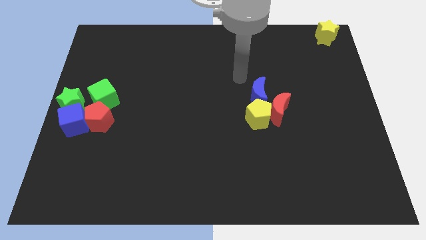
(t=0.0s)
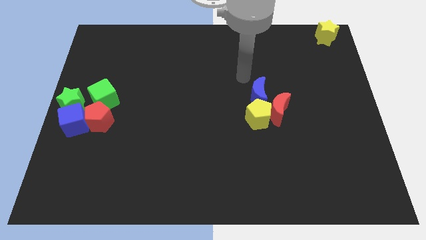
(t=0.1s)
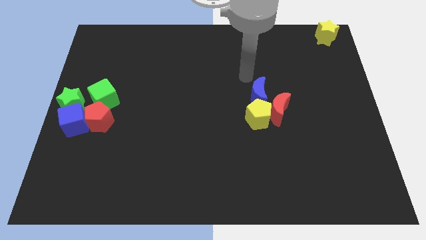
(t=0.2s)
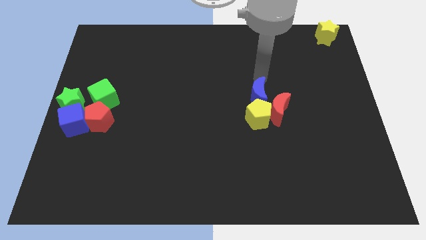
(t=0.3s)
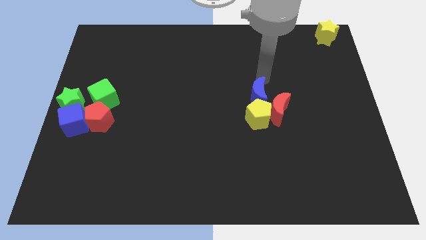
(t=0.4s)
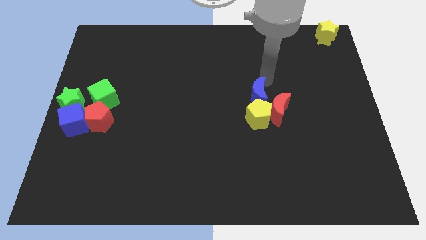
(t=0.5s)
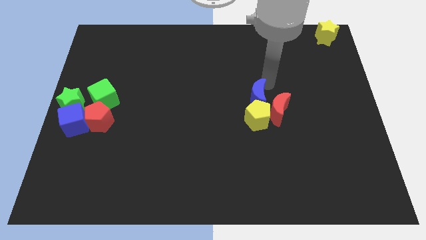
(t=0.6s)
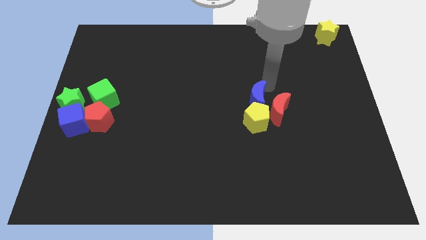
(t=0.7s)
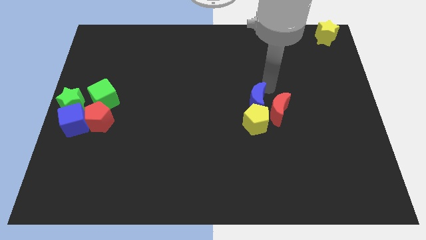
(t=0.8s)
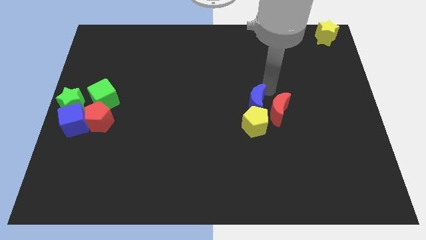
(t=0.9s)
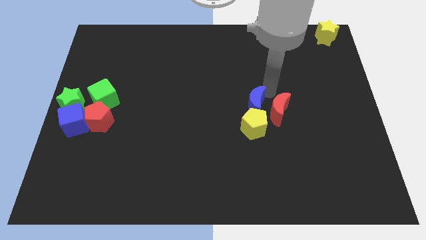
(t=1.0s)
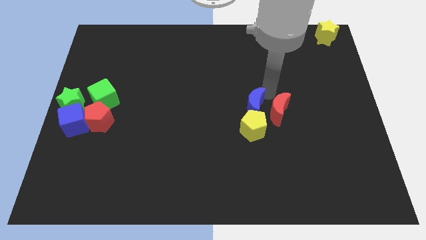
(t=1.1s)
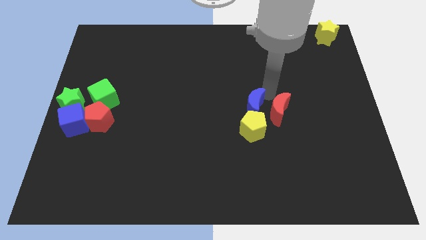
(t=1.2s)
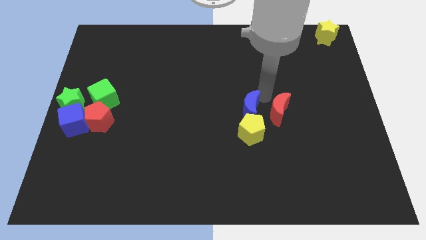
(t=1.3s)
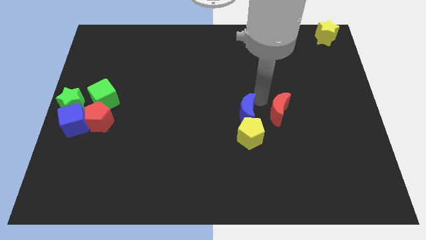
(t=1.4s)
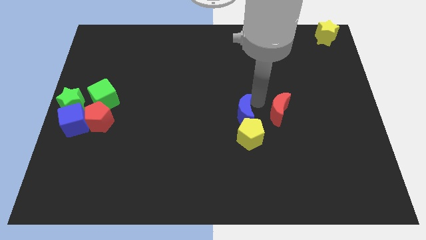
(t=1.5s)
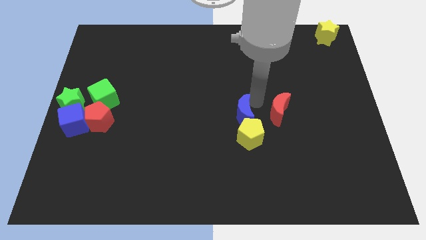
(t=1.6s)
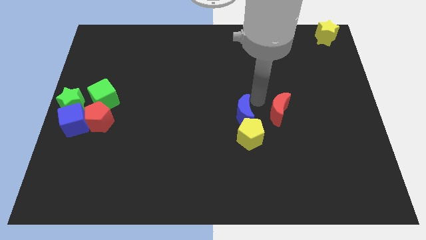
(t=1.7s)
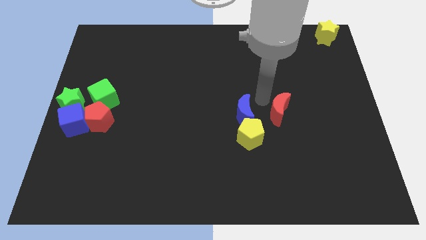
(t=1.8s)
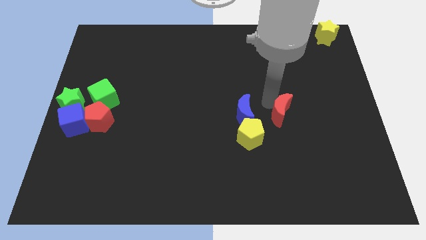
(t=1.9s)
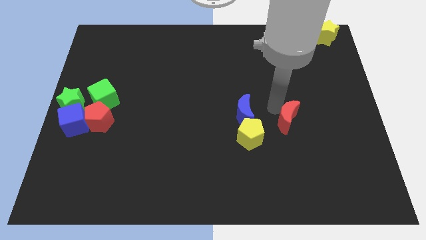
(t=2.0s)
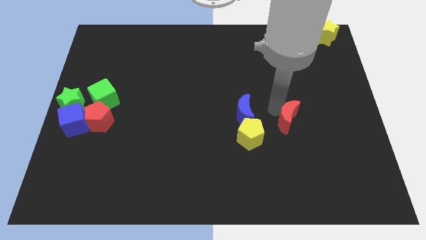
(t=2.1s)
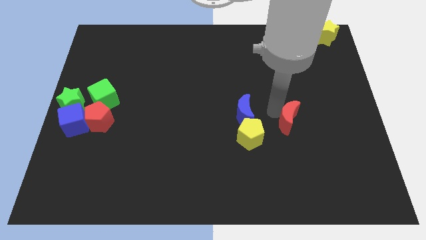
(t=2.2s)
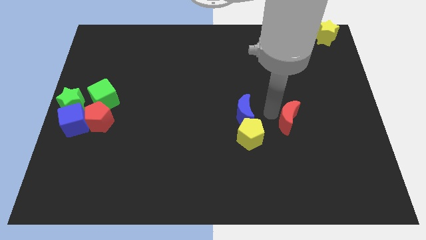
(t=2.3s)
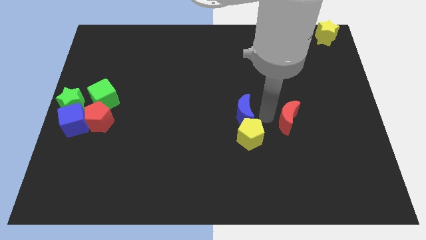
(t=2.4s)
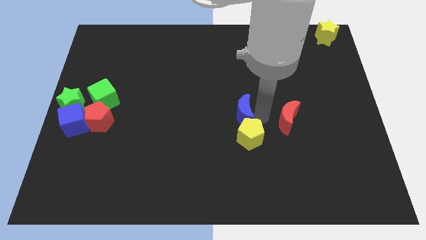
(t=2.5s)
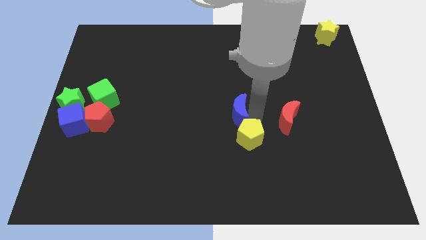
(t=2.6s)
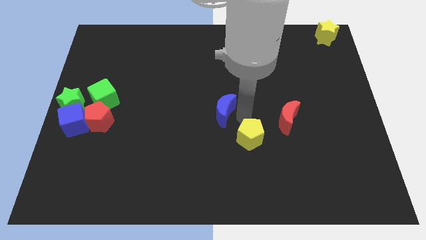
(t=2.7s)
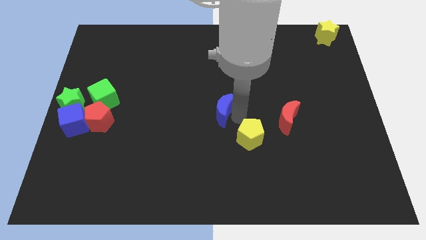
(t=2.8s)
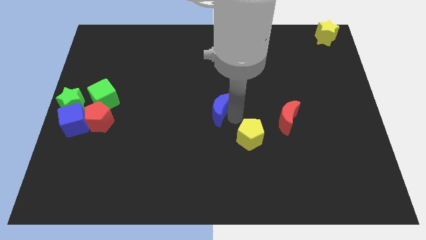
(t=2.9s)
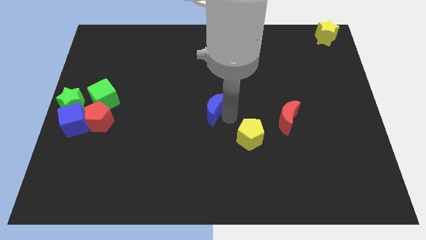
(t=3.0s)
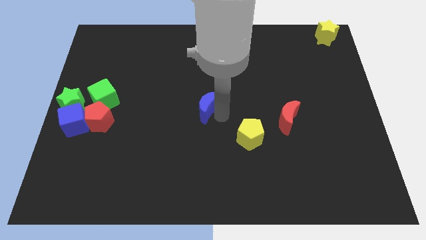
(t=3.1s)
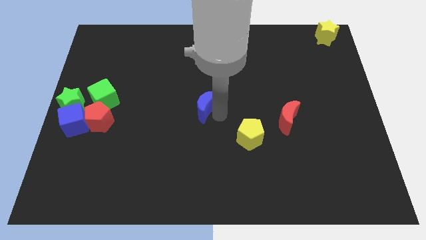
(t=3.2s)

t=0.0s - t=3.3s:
separate the blue moon from yellow pentagon towards left

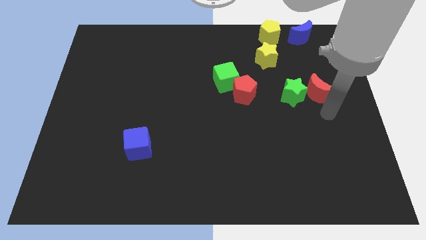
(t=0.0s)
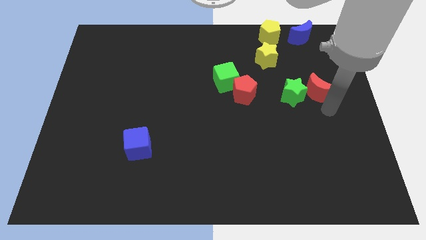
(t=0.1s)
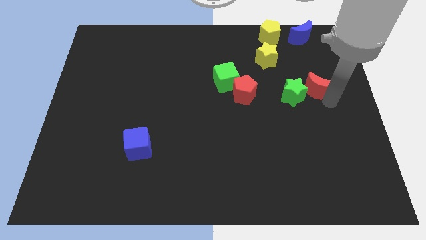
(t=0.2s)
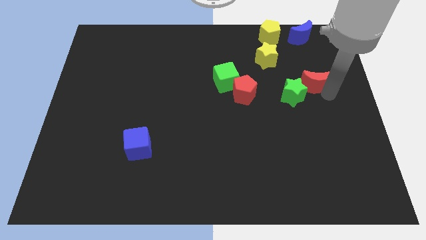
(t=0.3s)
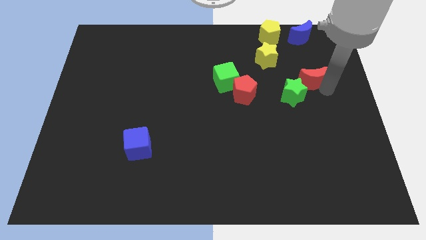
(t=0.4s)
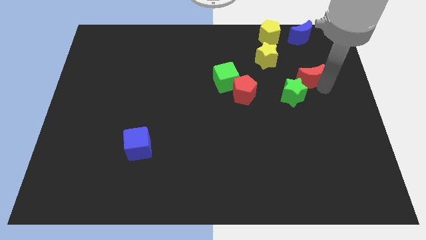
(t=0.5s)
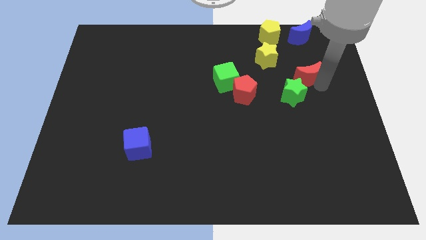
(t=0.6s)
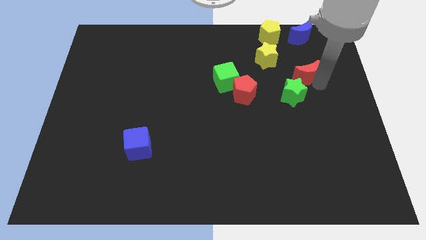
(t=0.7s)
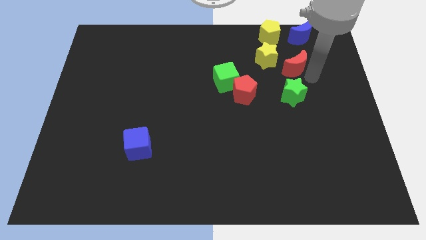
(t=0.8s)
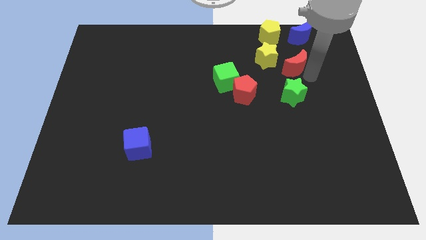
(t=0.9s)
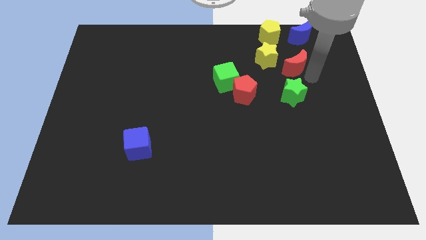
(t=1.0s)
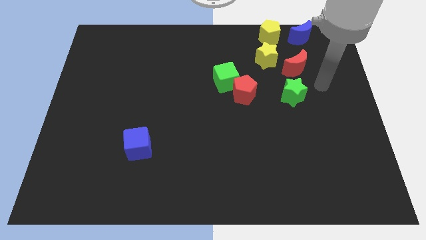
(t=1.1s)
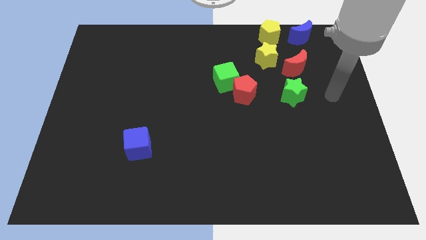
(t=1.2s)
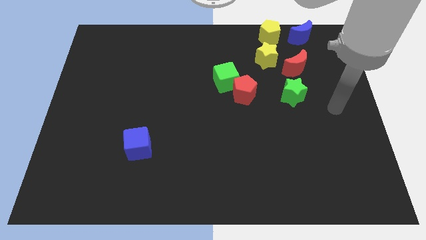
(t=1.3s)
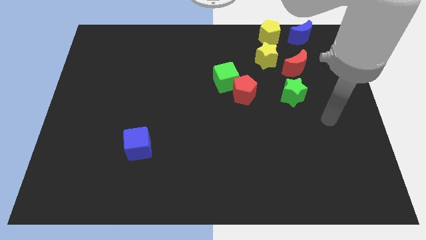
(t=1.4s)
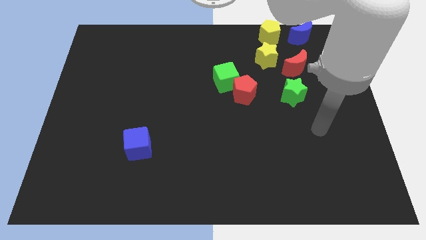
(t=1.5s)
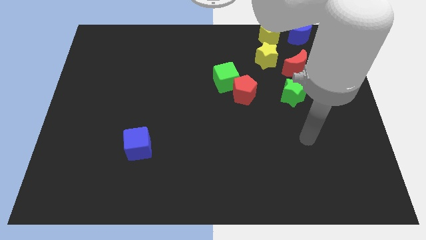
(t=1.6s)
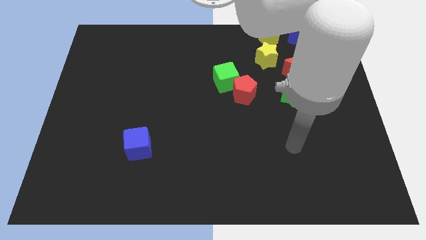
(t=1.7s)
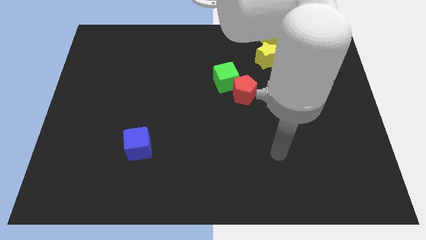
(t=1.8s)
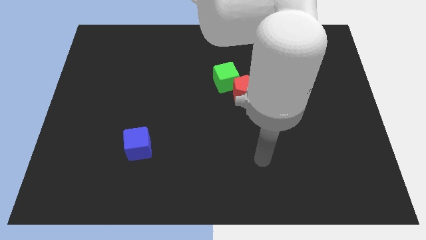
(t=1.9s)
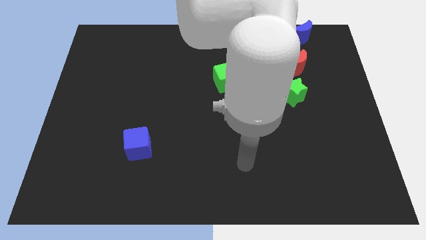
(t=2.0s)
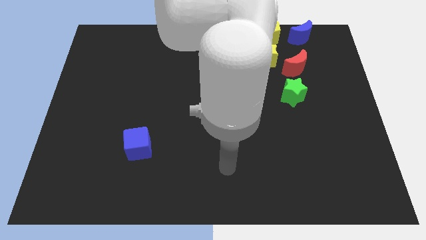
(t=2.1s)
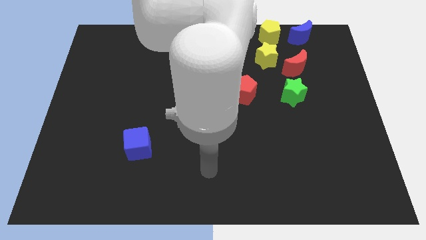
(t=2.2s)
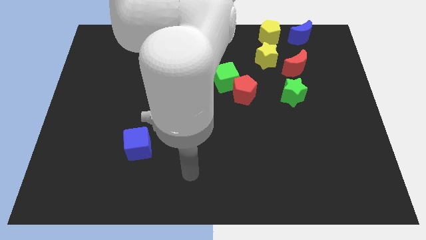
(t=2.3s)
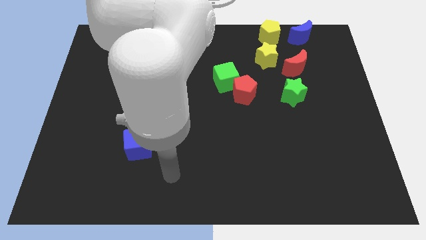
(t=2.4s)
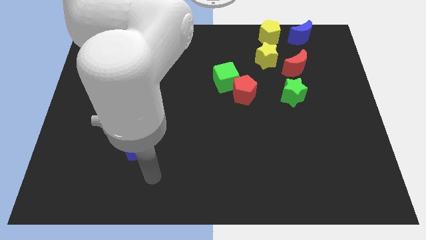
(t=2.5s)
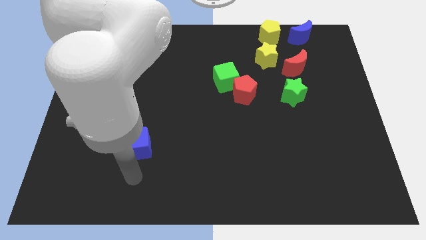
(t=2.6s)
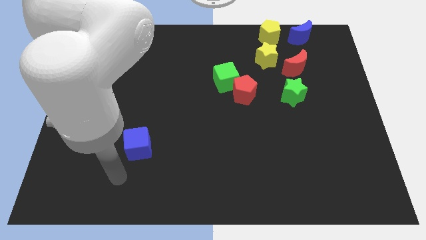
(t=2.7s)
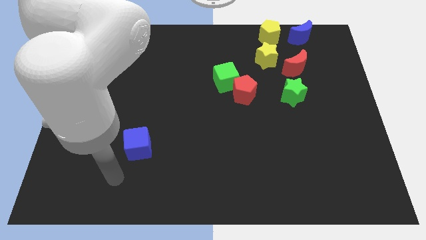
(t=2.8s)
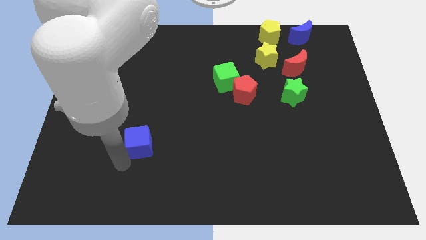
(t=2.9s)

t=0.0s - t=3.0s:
move the red moon above the green star

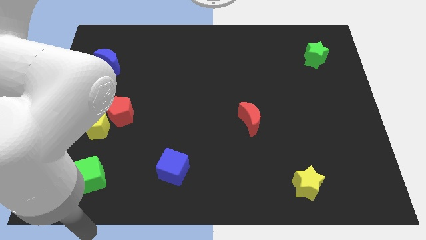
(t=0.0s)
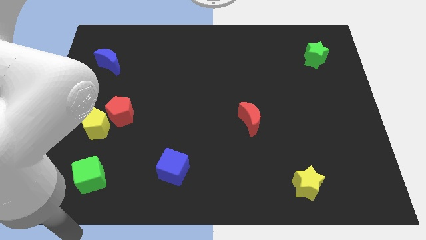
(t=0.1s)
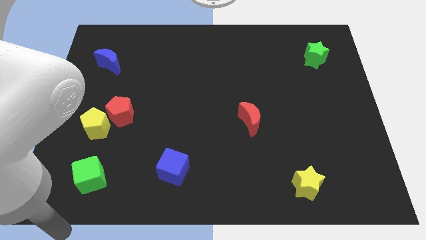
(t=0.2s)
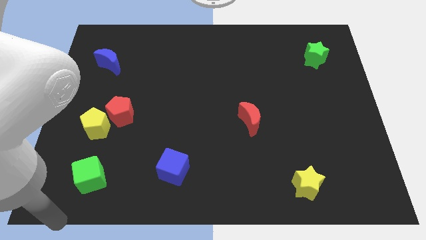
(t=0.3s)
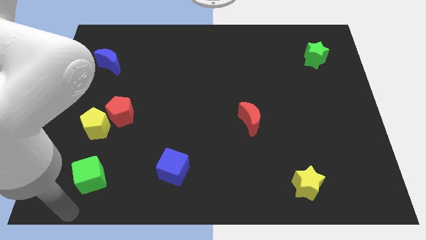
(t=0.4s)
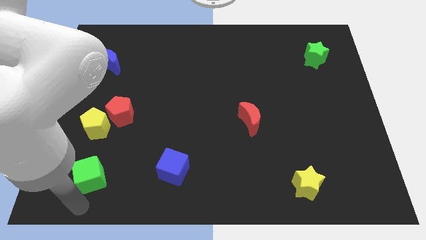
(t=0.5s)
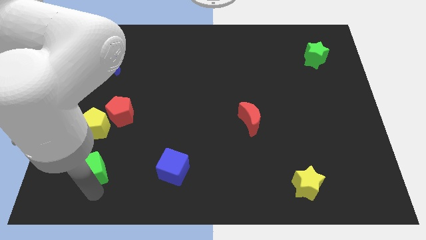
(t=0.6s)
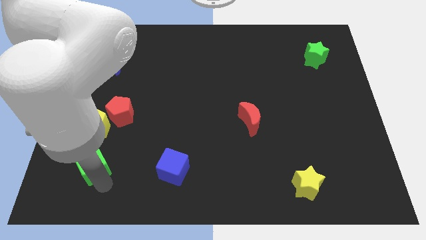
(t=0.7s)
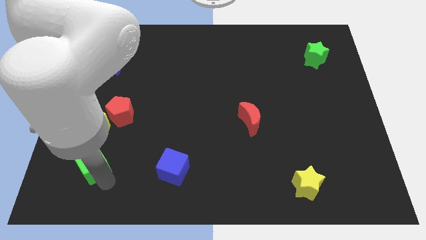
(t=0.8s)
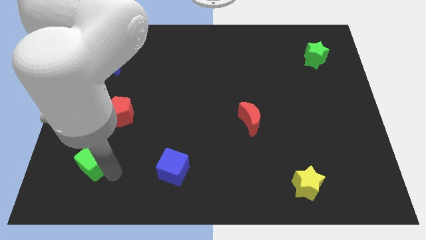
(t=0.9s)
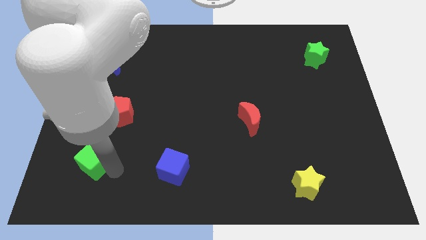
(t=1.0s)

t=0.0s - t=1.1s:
push green cube to the left of blue cube

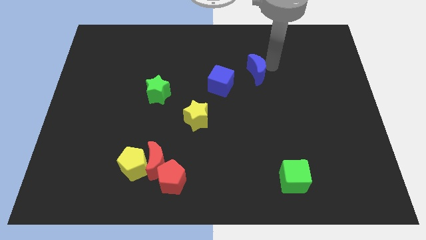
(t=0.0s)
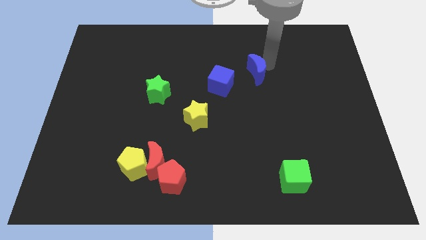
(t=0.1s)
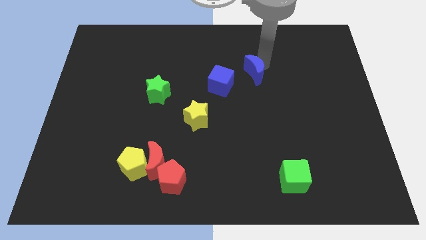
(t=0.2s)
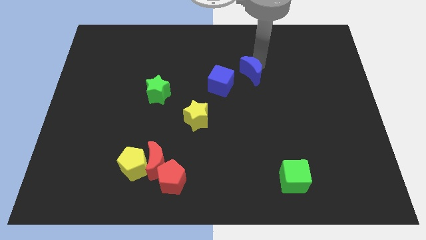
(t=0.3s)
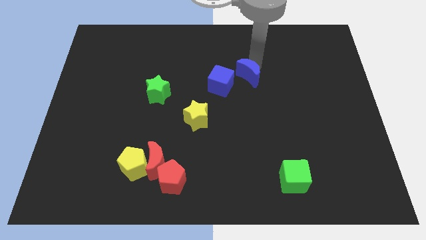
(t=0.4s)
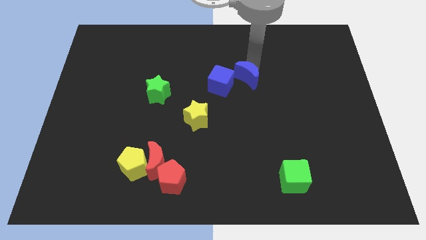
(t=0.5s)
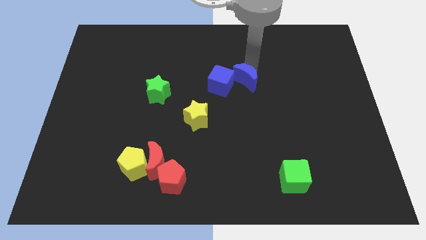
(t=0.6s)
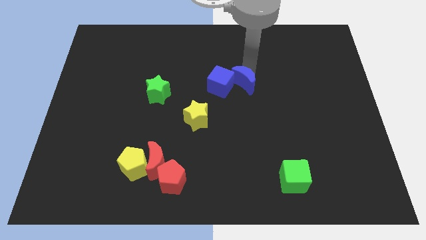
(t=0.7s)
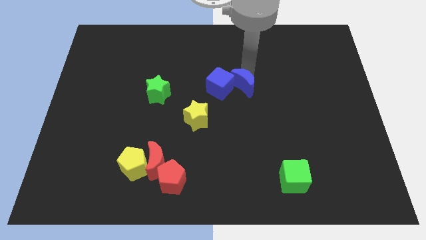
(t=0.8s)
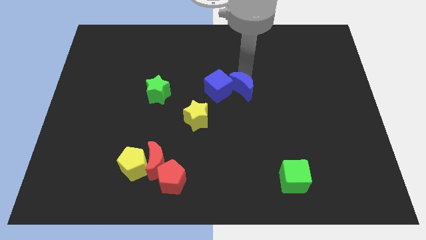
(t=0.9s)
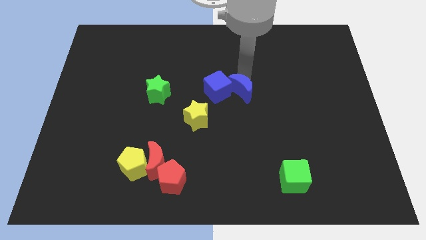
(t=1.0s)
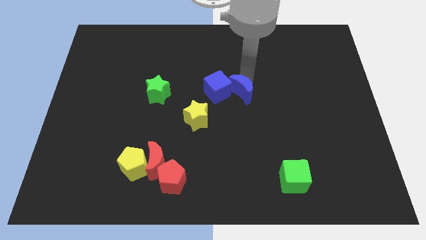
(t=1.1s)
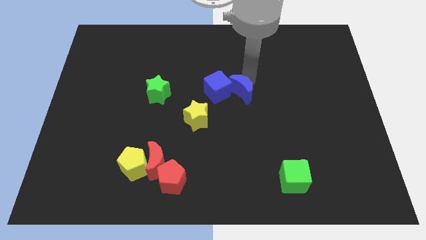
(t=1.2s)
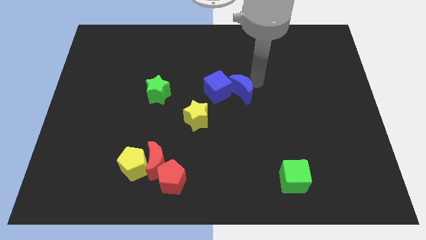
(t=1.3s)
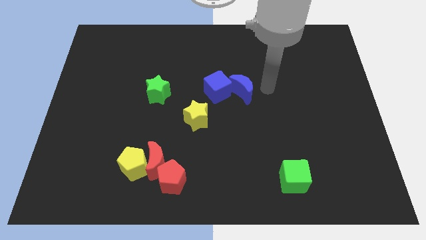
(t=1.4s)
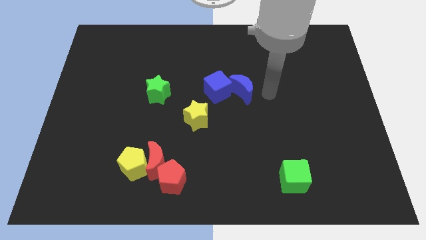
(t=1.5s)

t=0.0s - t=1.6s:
push the blue moon into the blue cube
